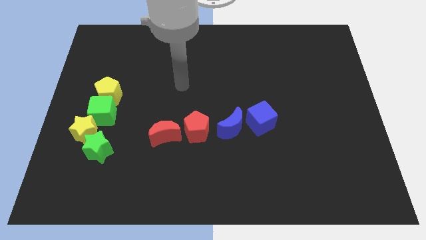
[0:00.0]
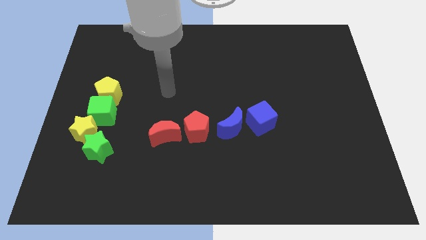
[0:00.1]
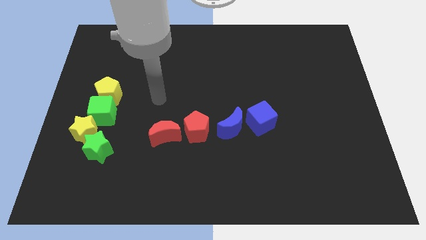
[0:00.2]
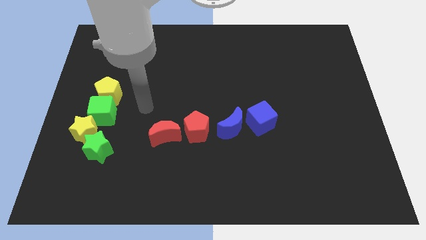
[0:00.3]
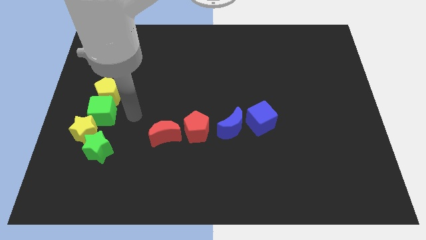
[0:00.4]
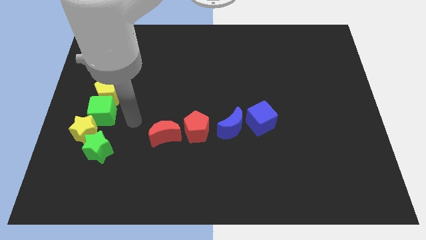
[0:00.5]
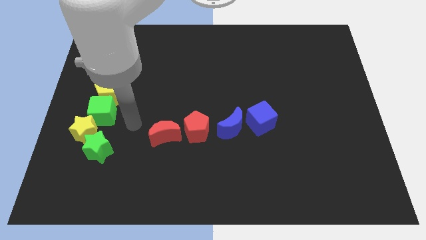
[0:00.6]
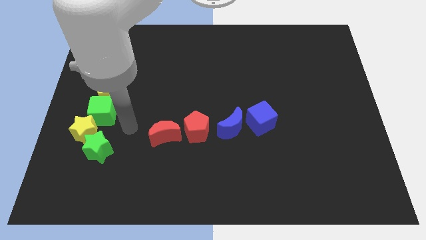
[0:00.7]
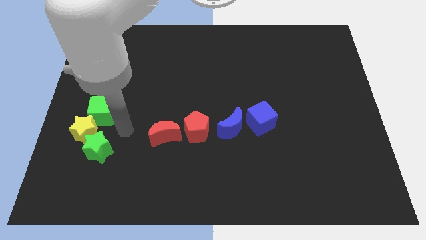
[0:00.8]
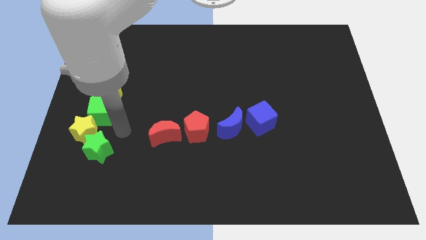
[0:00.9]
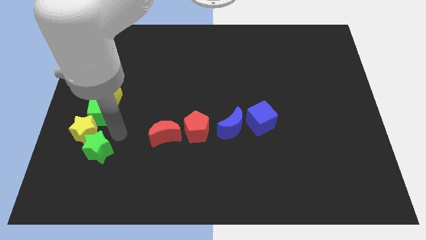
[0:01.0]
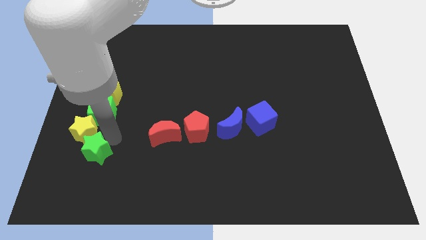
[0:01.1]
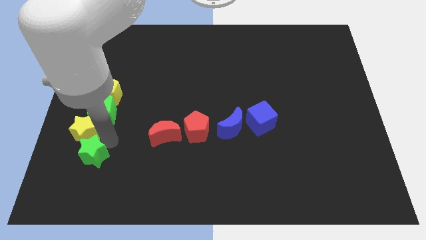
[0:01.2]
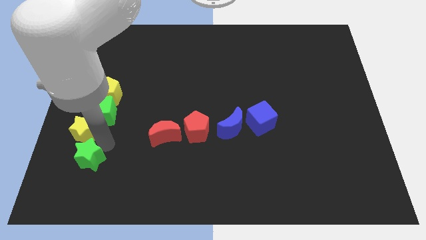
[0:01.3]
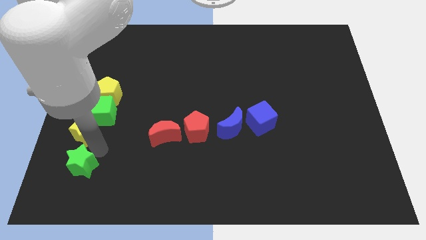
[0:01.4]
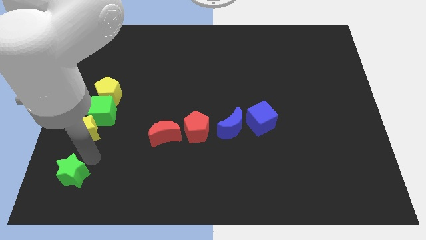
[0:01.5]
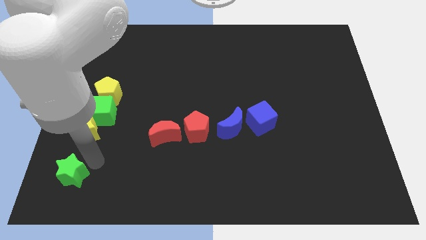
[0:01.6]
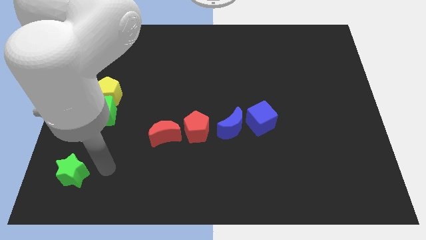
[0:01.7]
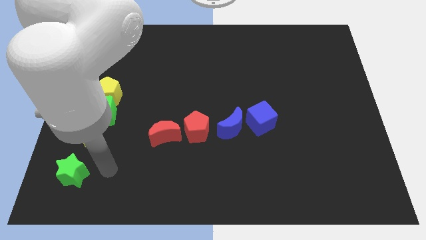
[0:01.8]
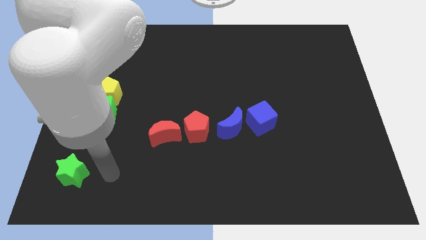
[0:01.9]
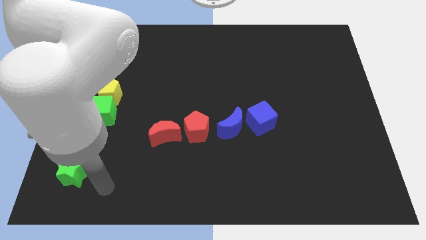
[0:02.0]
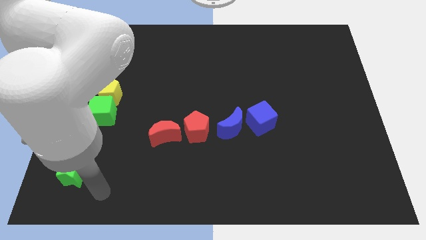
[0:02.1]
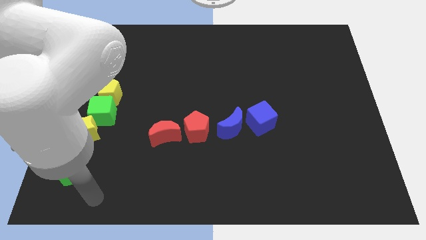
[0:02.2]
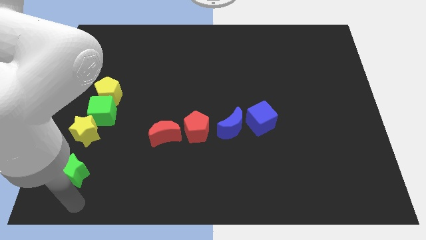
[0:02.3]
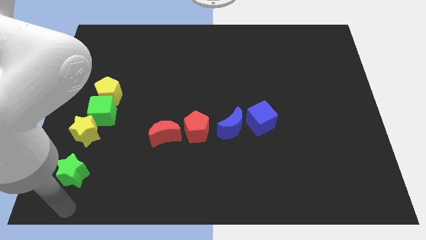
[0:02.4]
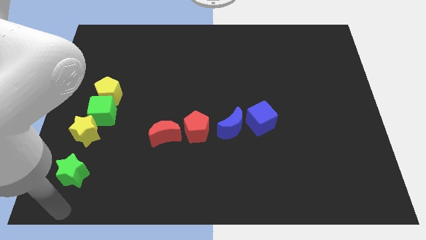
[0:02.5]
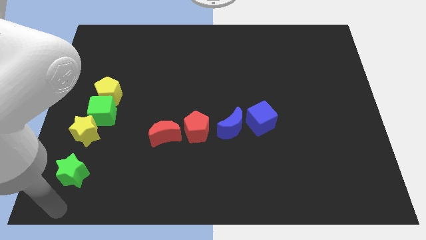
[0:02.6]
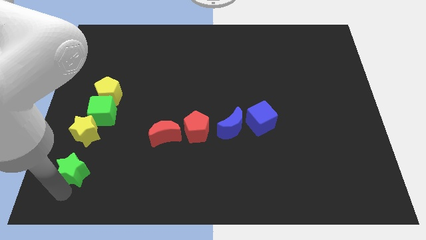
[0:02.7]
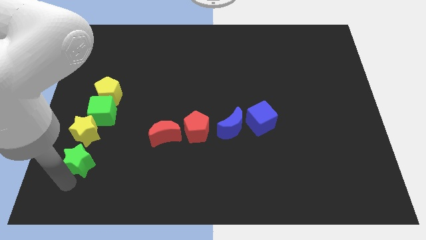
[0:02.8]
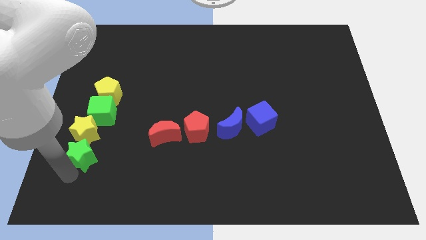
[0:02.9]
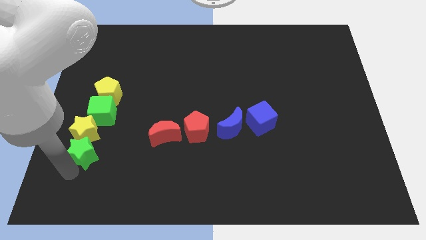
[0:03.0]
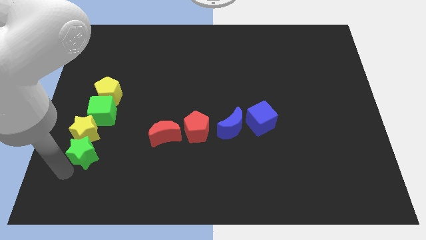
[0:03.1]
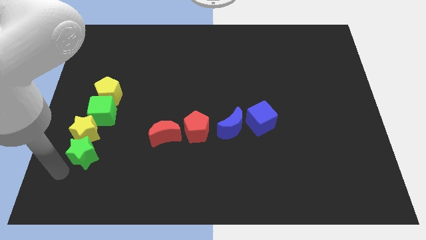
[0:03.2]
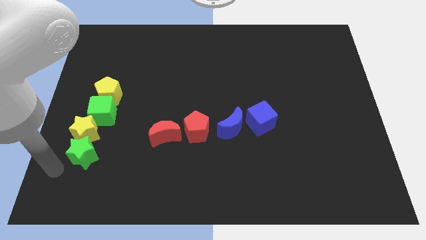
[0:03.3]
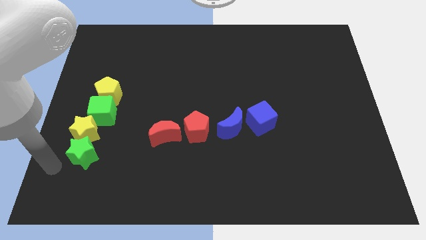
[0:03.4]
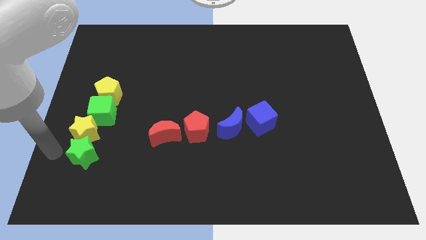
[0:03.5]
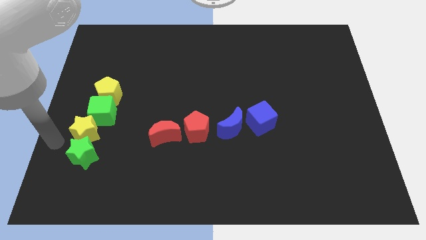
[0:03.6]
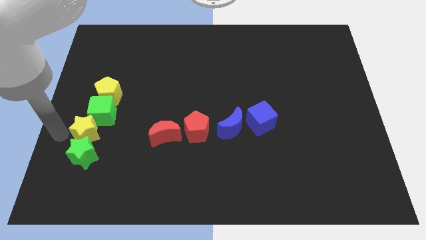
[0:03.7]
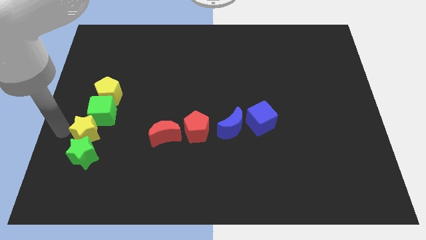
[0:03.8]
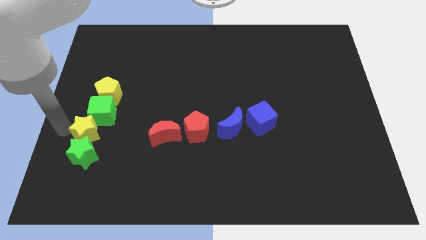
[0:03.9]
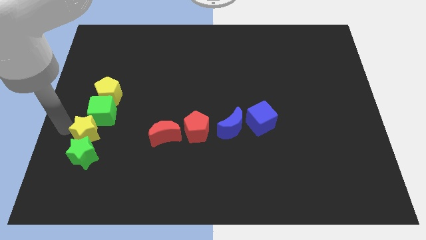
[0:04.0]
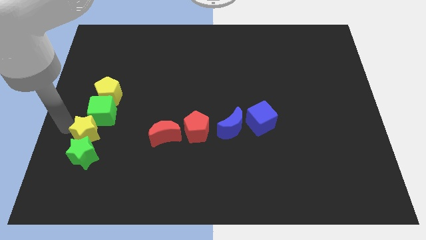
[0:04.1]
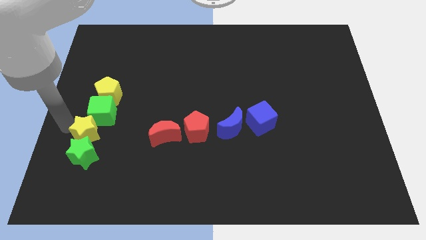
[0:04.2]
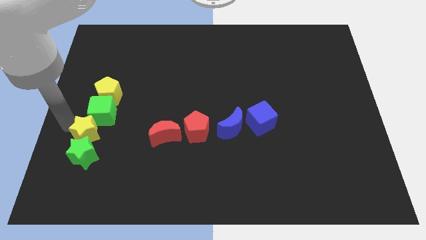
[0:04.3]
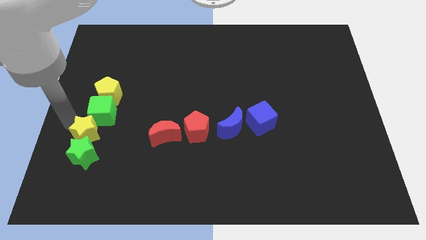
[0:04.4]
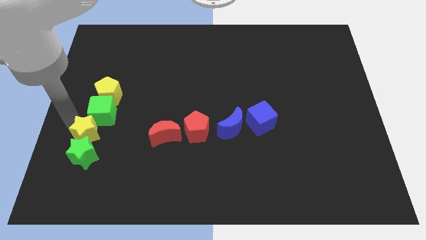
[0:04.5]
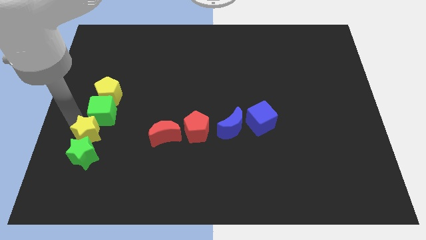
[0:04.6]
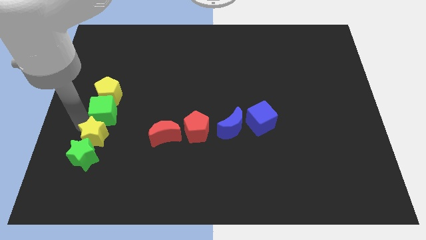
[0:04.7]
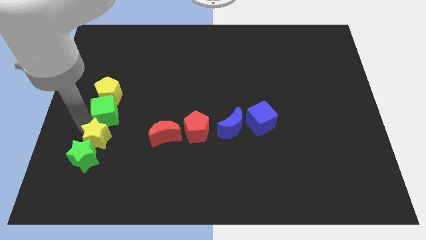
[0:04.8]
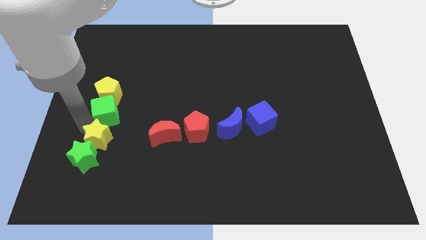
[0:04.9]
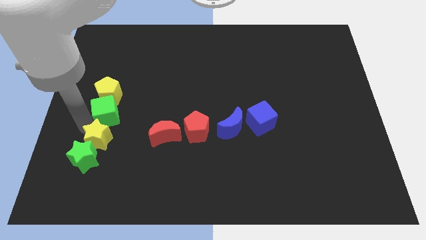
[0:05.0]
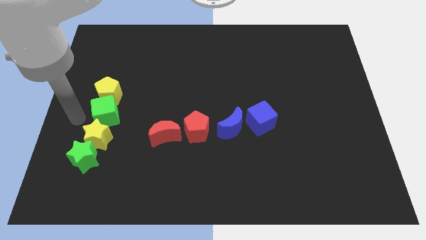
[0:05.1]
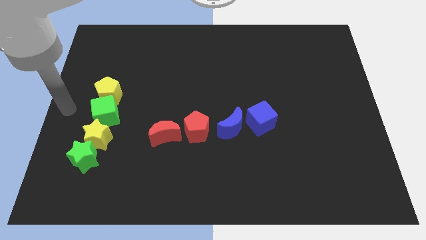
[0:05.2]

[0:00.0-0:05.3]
adjust the green star below the yellow star

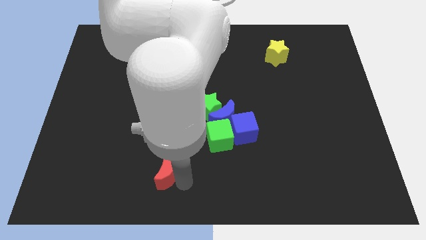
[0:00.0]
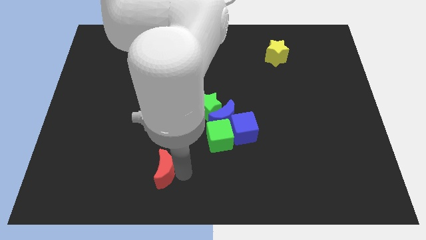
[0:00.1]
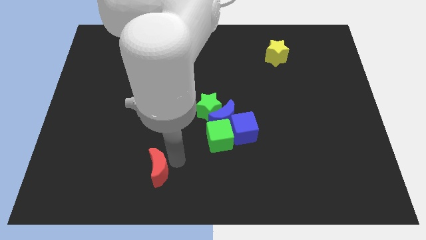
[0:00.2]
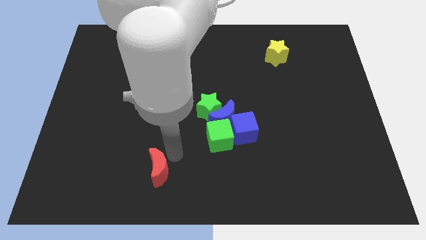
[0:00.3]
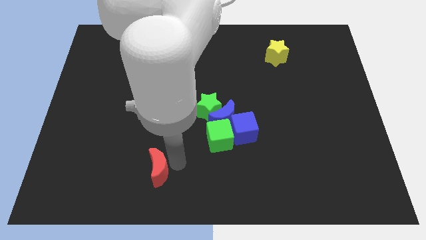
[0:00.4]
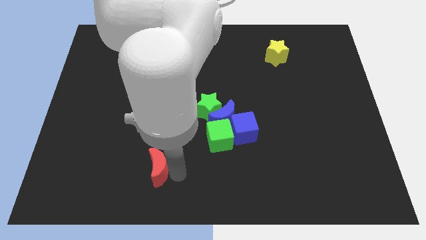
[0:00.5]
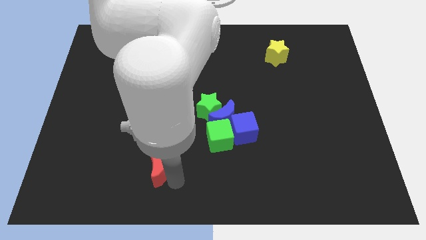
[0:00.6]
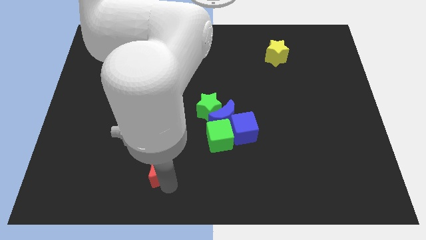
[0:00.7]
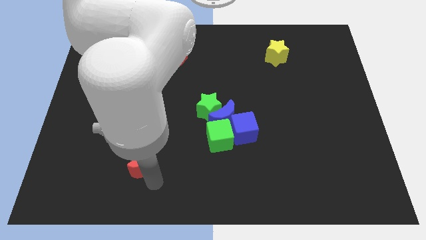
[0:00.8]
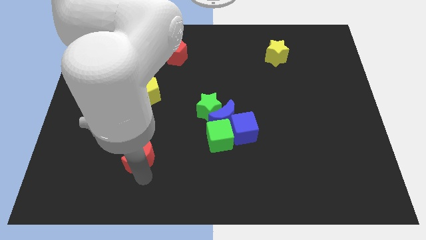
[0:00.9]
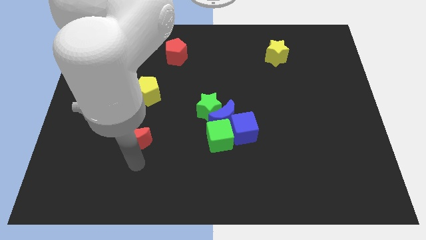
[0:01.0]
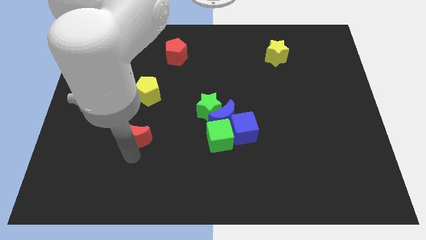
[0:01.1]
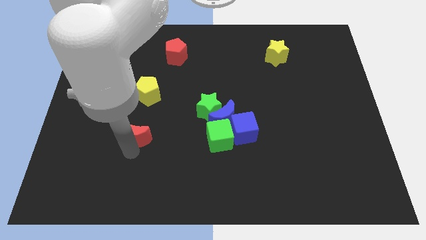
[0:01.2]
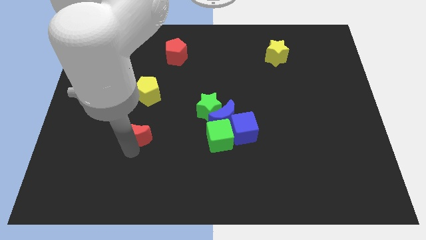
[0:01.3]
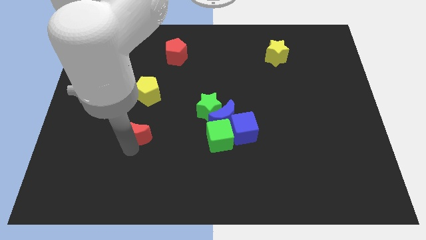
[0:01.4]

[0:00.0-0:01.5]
move the red moon parallel to the left of the green cube

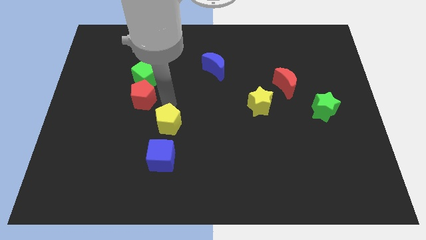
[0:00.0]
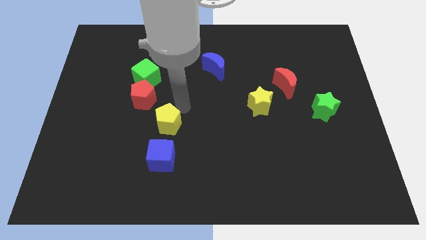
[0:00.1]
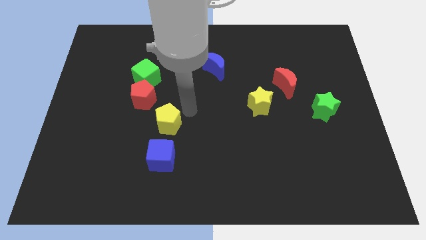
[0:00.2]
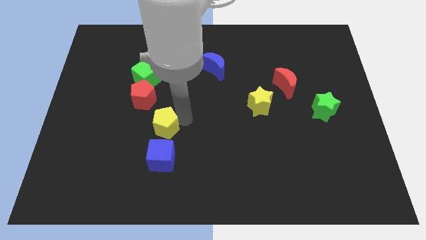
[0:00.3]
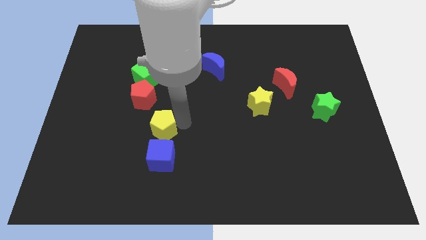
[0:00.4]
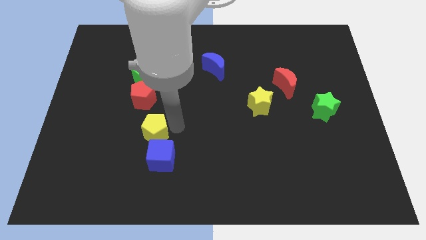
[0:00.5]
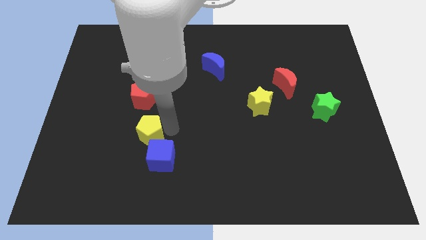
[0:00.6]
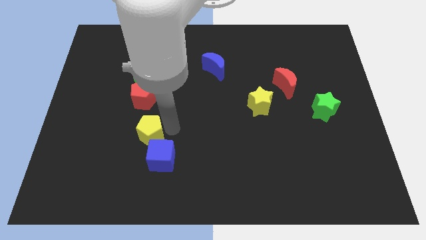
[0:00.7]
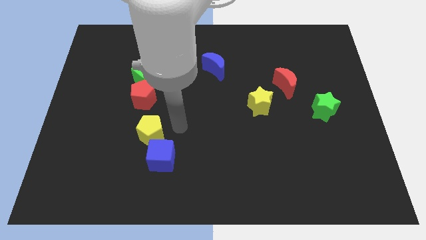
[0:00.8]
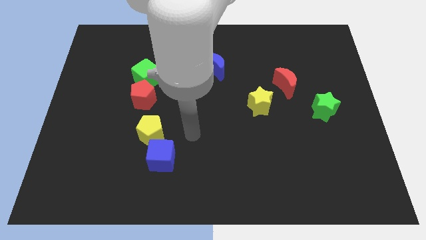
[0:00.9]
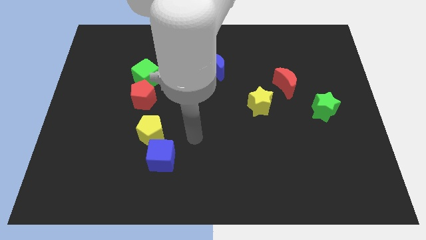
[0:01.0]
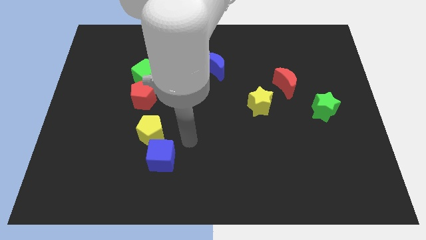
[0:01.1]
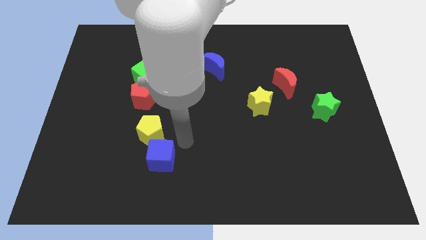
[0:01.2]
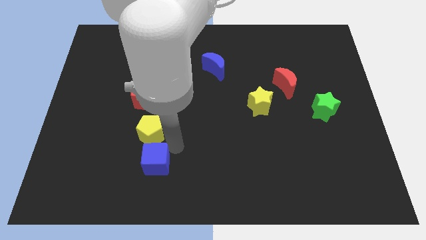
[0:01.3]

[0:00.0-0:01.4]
slightly push the yellow pentagon below the red pentagon

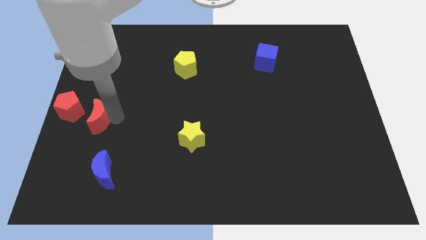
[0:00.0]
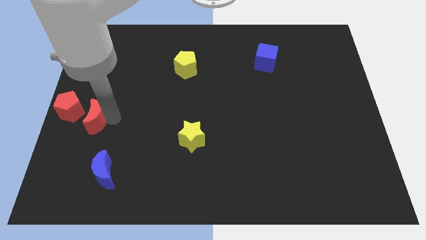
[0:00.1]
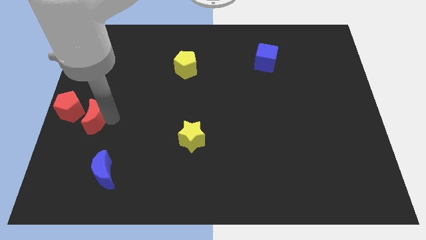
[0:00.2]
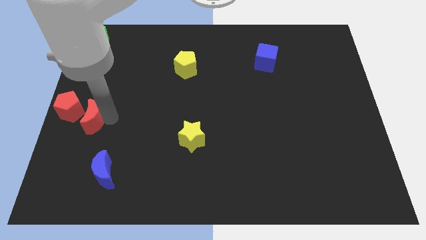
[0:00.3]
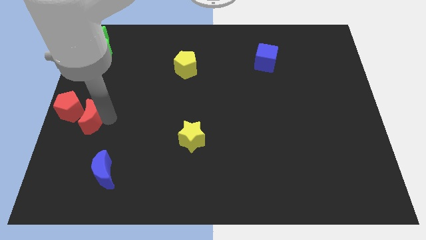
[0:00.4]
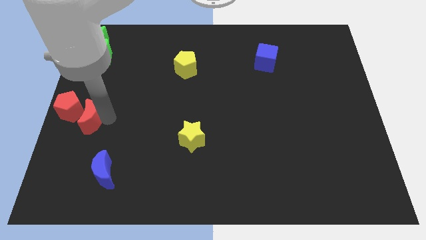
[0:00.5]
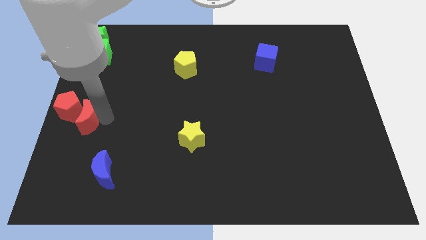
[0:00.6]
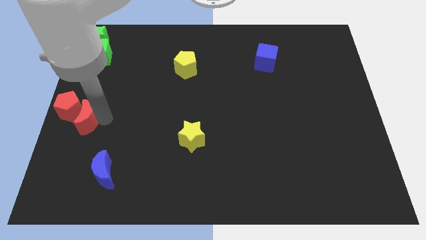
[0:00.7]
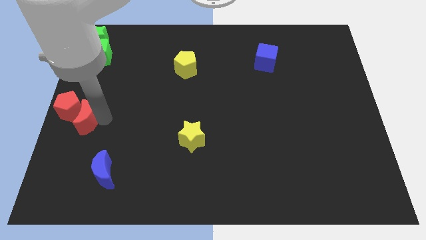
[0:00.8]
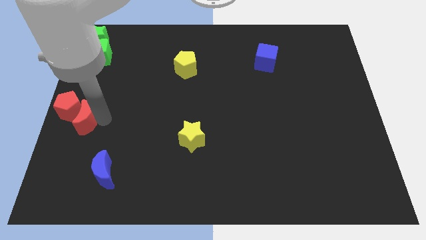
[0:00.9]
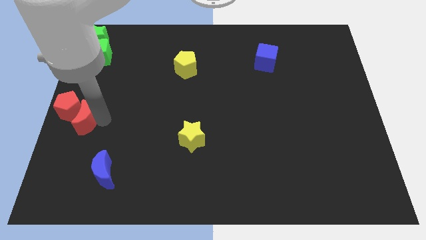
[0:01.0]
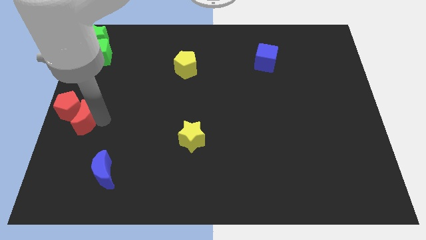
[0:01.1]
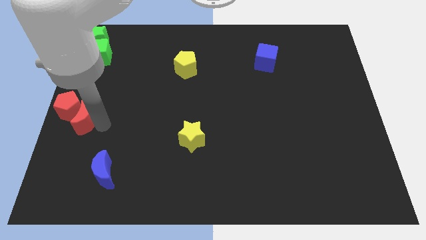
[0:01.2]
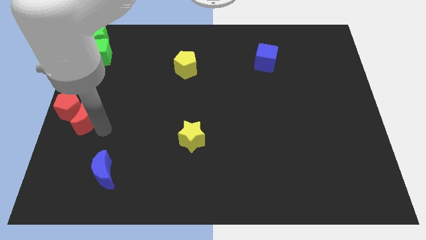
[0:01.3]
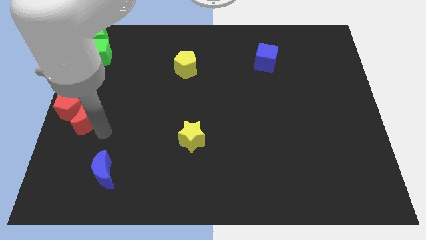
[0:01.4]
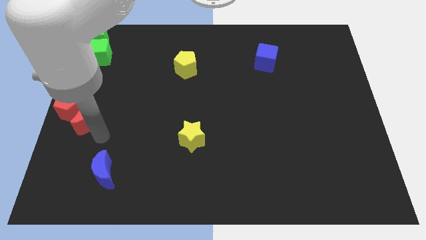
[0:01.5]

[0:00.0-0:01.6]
push the red crescent towards the red pentagon
